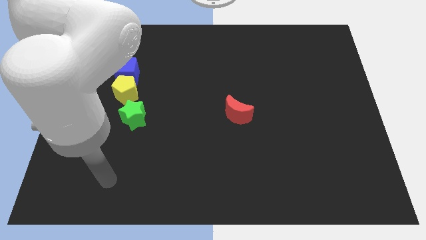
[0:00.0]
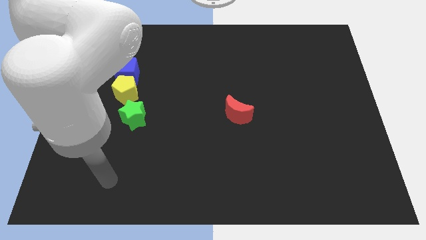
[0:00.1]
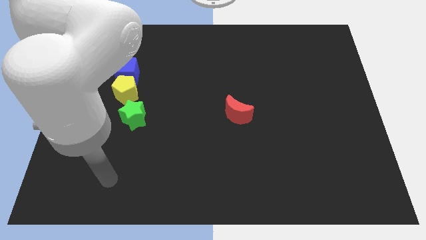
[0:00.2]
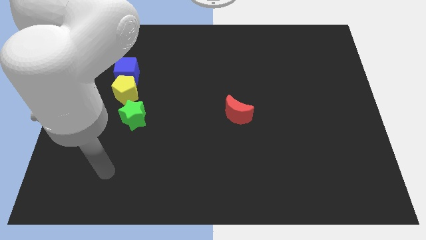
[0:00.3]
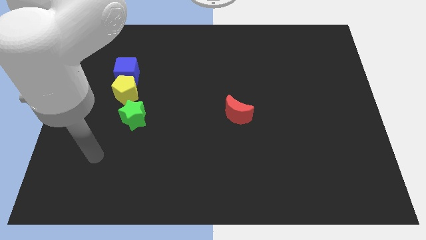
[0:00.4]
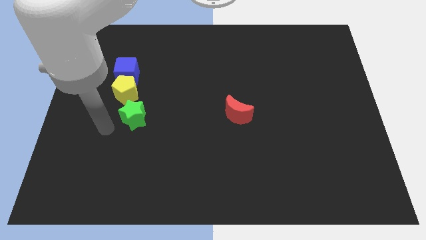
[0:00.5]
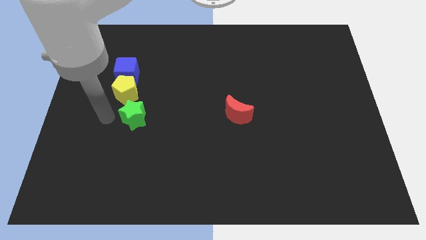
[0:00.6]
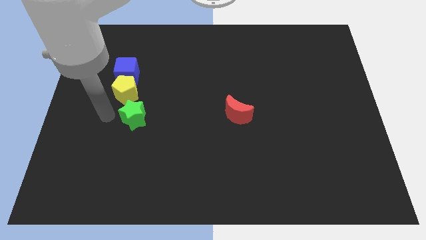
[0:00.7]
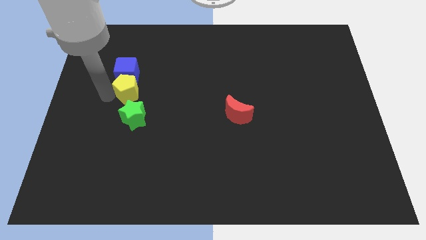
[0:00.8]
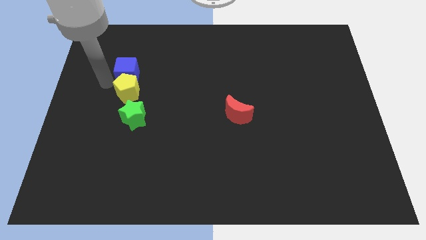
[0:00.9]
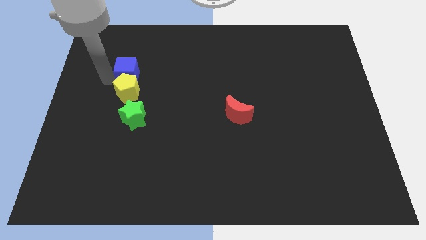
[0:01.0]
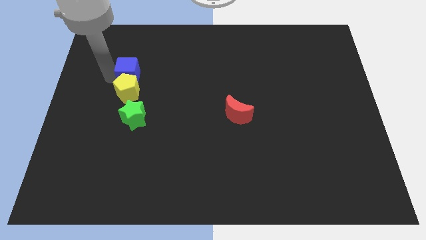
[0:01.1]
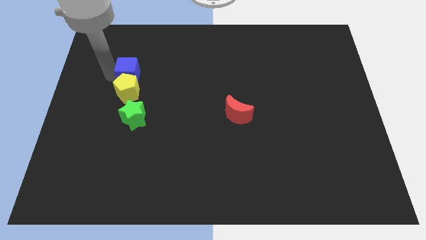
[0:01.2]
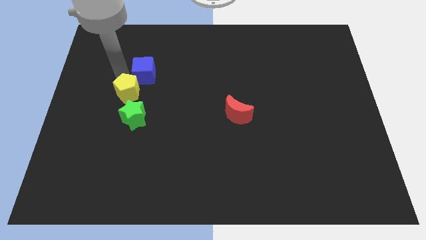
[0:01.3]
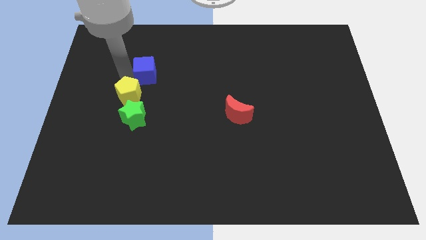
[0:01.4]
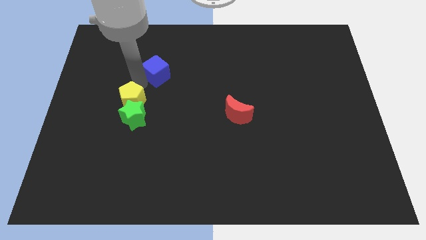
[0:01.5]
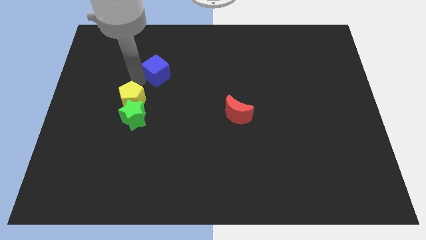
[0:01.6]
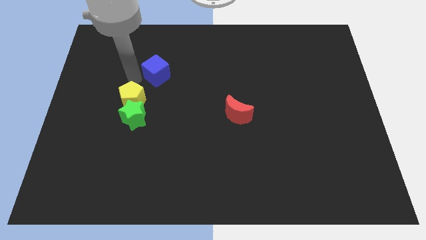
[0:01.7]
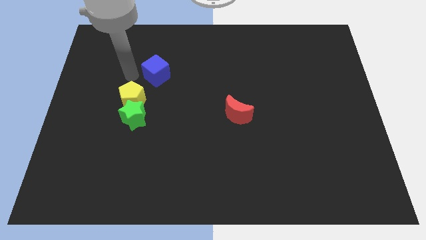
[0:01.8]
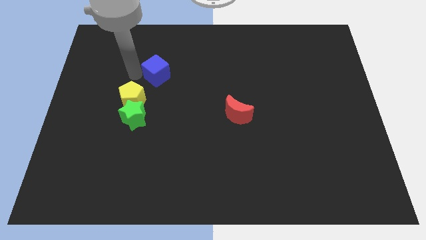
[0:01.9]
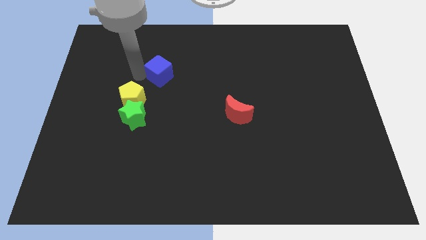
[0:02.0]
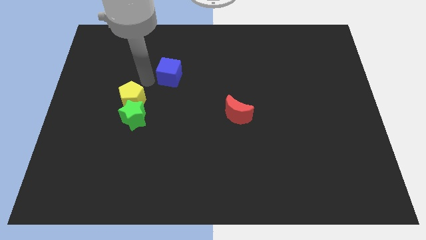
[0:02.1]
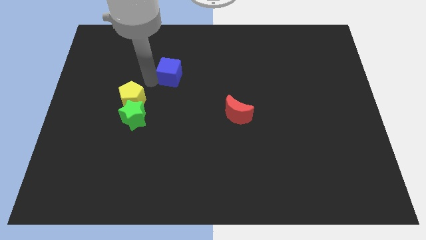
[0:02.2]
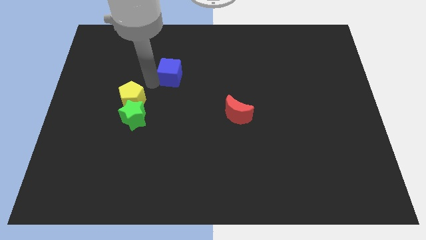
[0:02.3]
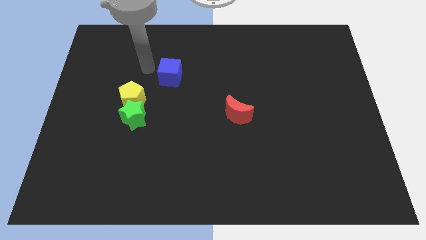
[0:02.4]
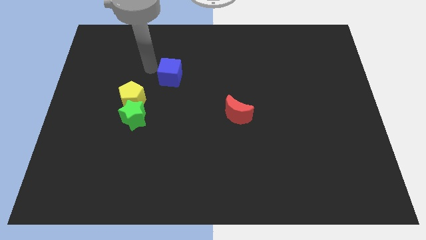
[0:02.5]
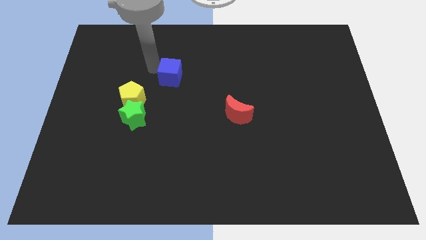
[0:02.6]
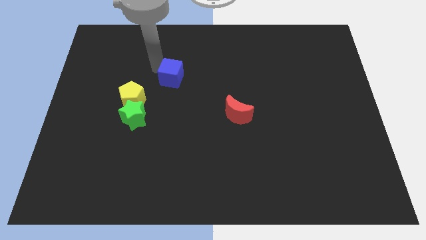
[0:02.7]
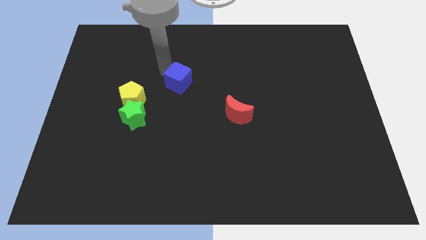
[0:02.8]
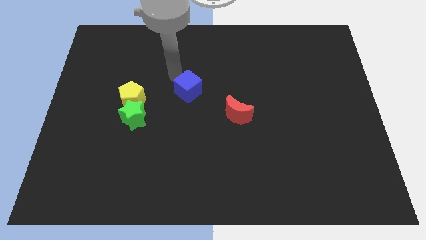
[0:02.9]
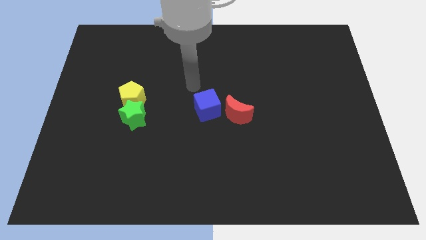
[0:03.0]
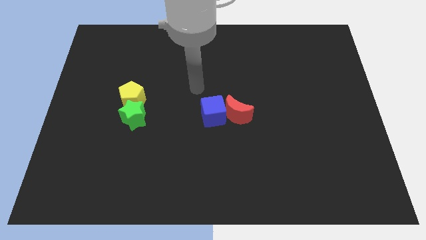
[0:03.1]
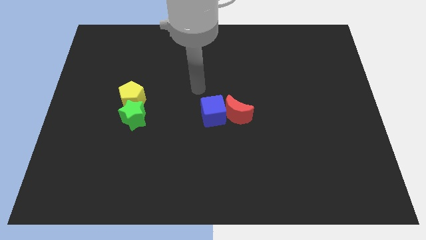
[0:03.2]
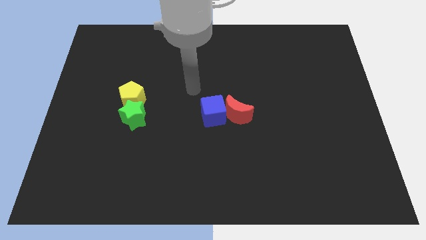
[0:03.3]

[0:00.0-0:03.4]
push the blue cube to the moon

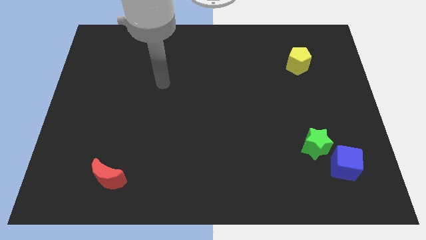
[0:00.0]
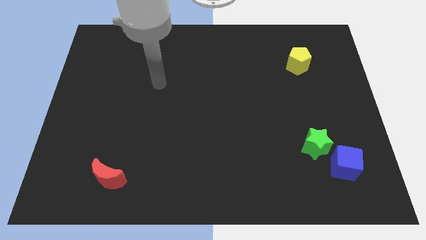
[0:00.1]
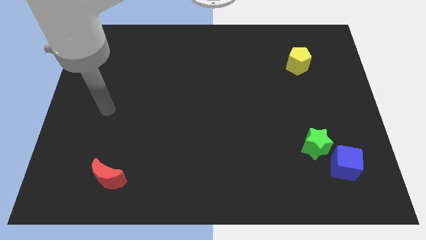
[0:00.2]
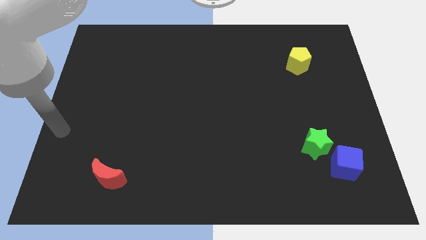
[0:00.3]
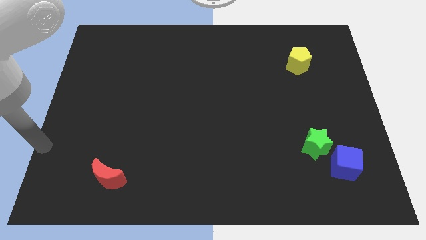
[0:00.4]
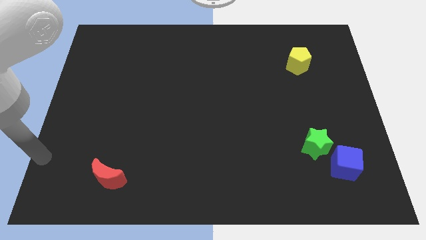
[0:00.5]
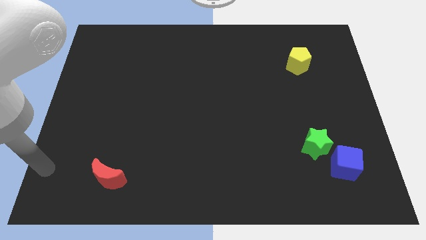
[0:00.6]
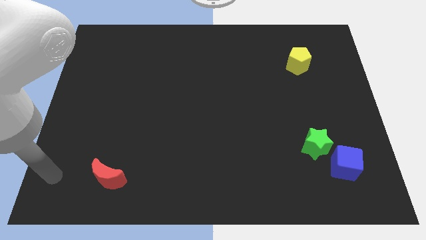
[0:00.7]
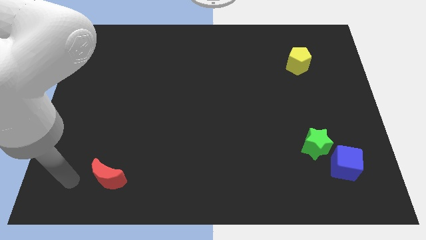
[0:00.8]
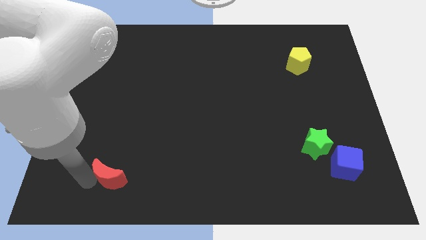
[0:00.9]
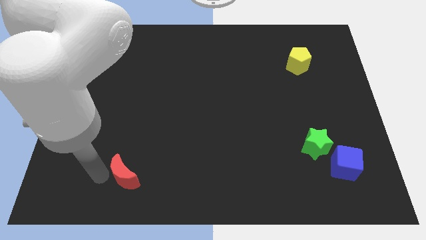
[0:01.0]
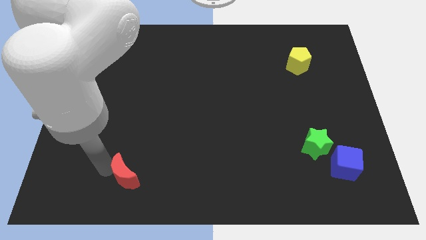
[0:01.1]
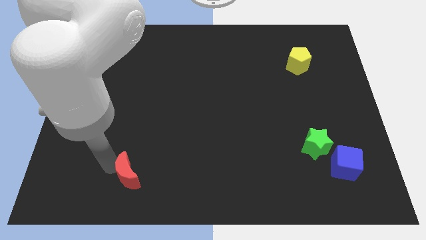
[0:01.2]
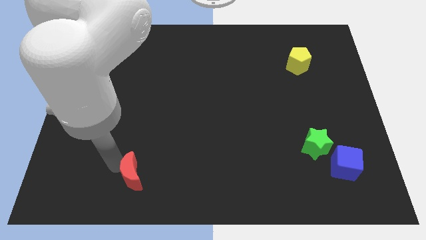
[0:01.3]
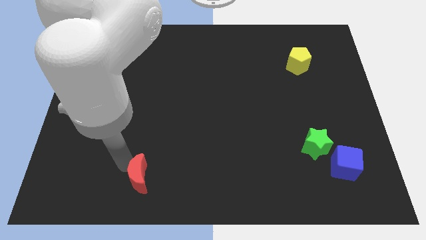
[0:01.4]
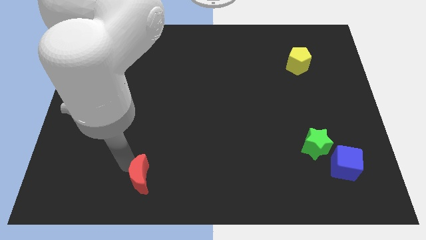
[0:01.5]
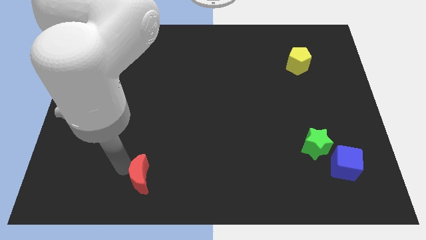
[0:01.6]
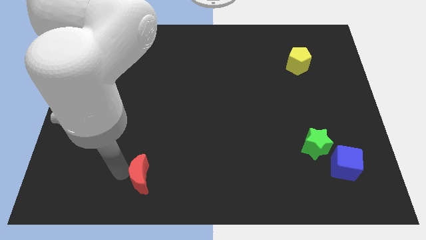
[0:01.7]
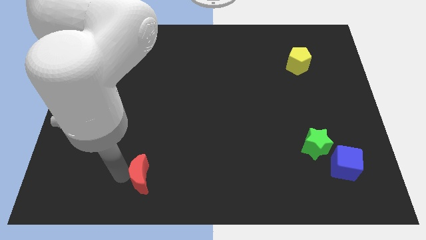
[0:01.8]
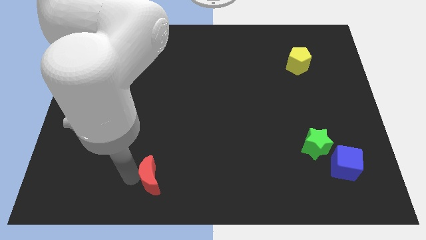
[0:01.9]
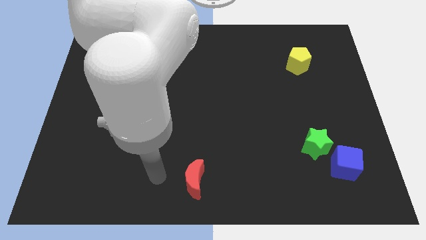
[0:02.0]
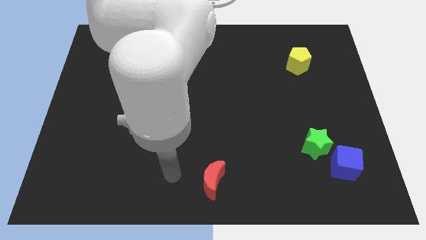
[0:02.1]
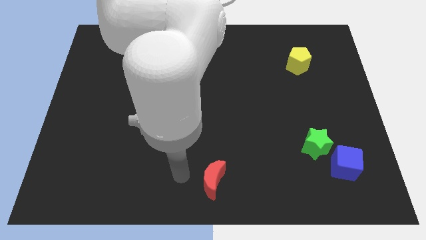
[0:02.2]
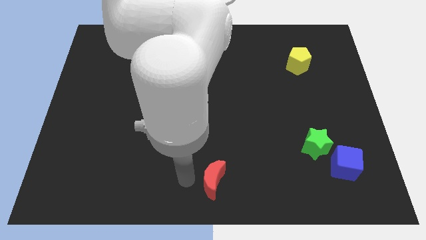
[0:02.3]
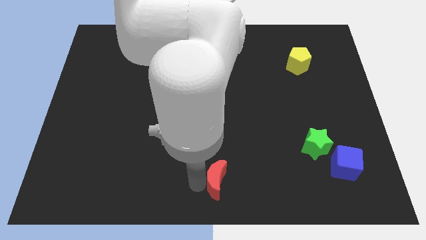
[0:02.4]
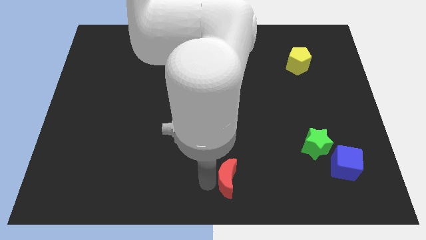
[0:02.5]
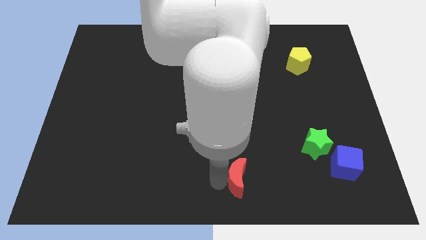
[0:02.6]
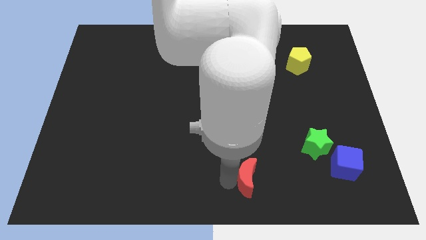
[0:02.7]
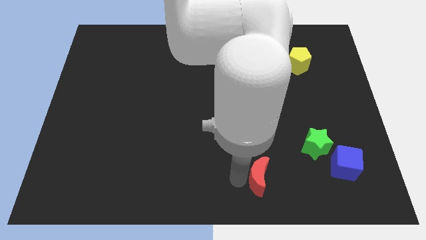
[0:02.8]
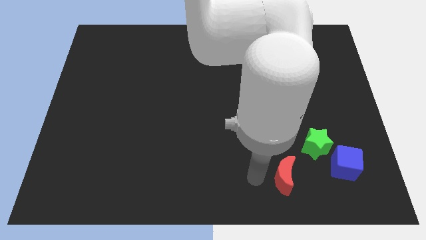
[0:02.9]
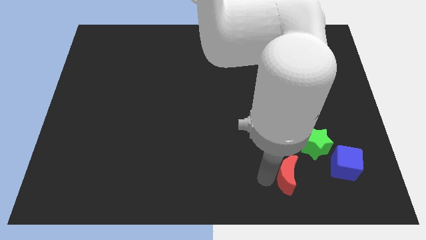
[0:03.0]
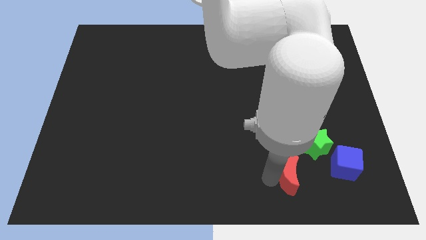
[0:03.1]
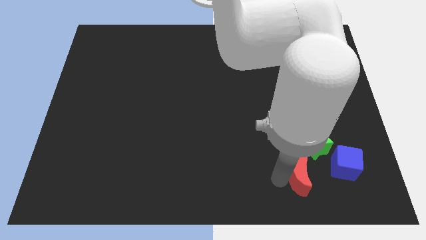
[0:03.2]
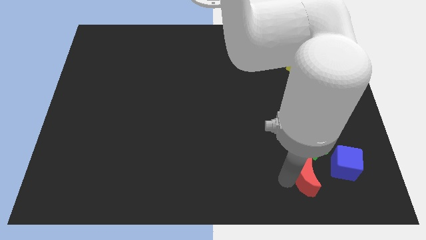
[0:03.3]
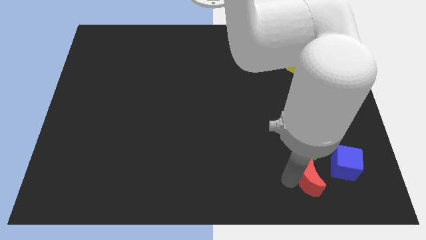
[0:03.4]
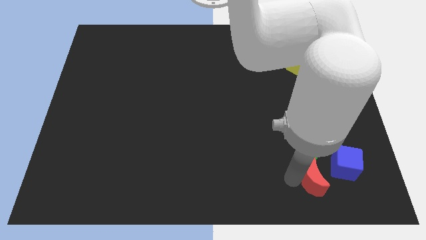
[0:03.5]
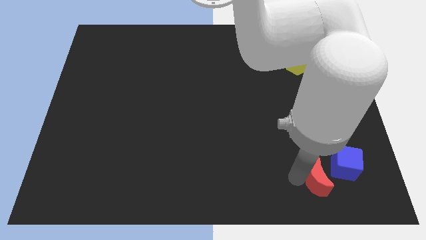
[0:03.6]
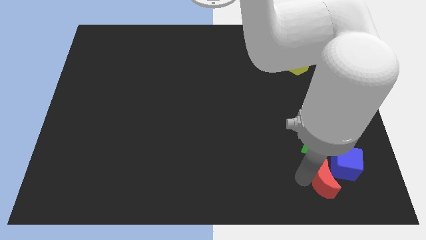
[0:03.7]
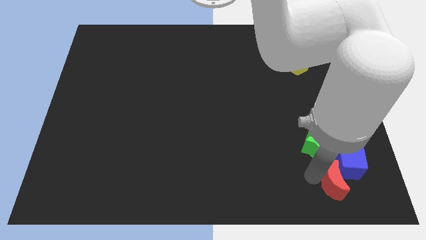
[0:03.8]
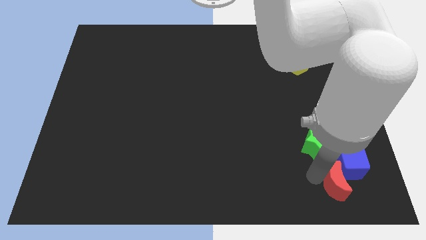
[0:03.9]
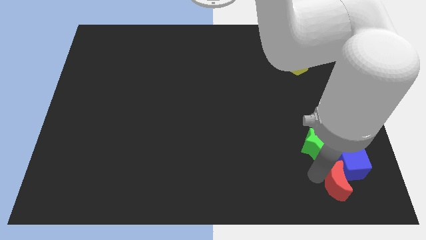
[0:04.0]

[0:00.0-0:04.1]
push the red moon to the blue cube

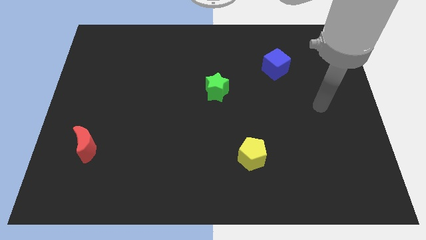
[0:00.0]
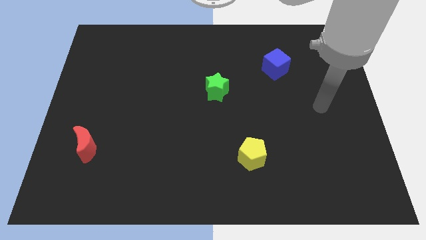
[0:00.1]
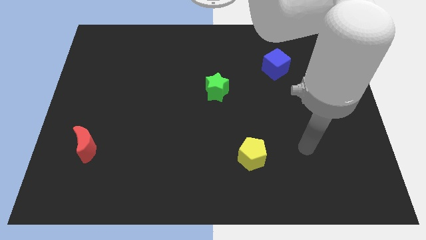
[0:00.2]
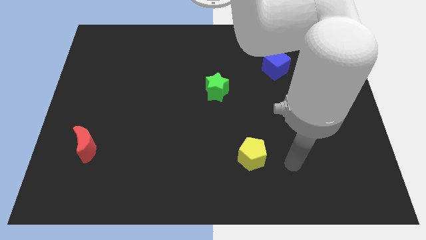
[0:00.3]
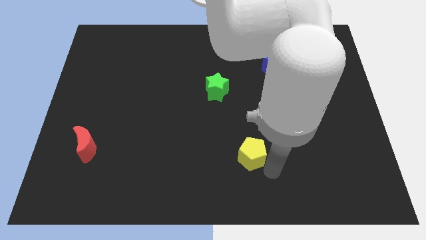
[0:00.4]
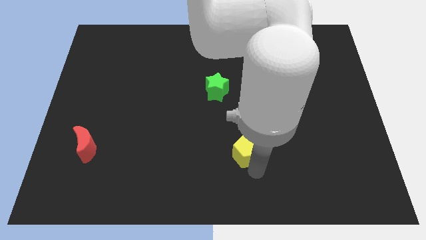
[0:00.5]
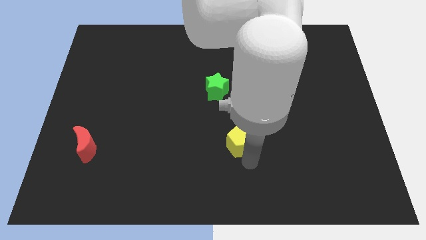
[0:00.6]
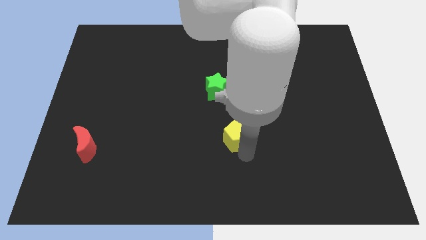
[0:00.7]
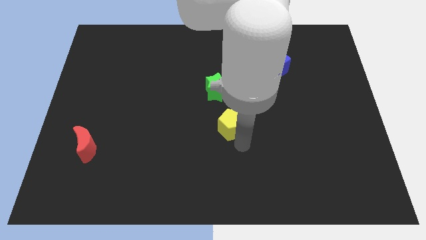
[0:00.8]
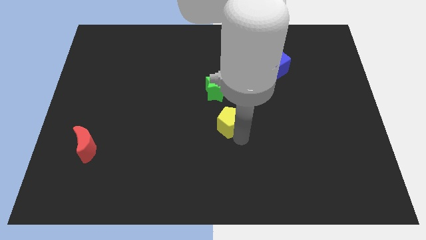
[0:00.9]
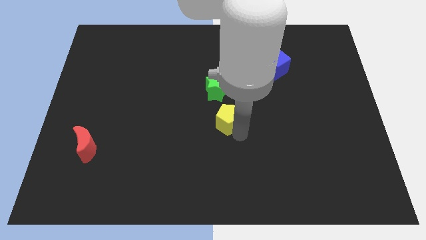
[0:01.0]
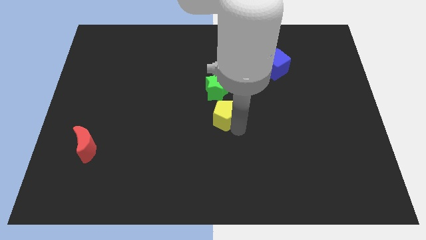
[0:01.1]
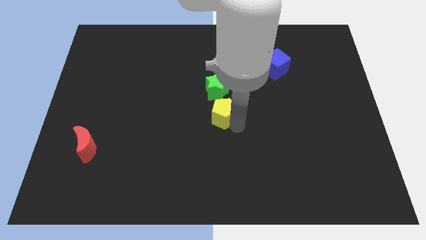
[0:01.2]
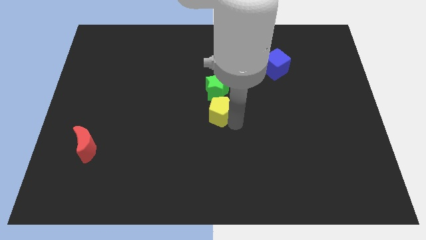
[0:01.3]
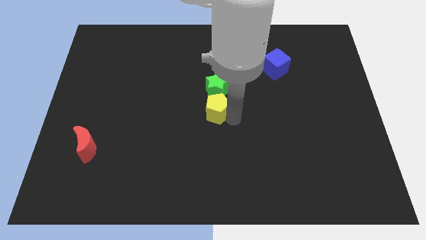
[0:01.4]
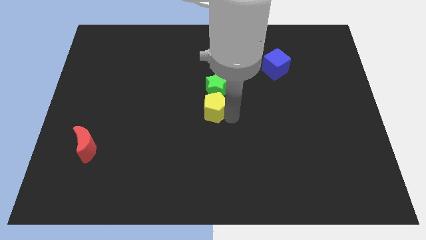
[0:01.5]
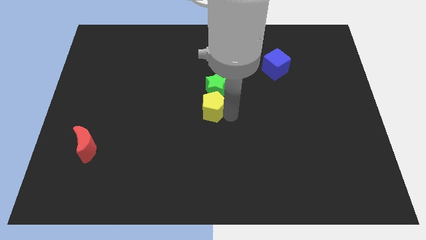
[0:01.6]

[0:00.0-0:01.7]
move the pentagon close to the green star
